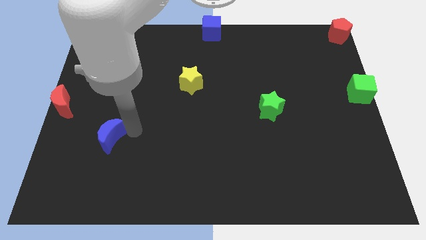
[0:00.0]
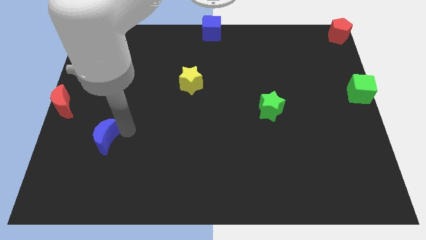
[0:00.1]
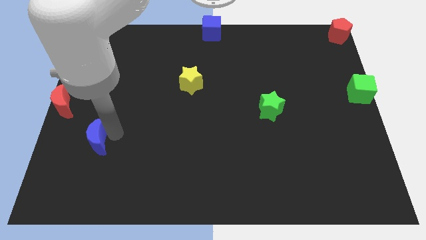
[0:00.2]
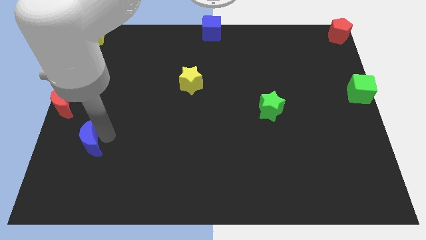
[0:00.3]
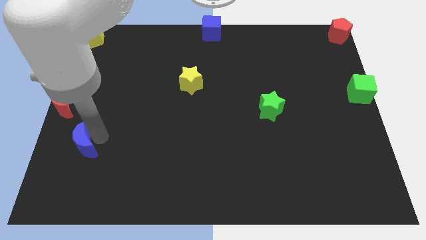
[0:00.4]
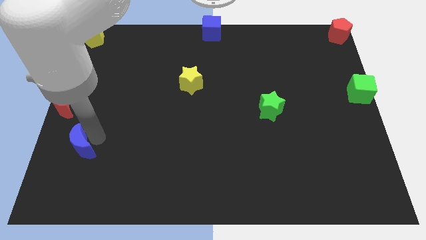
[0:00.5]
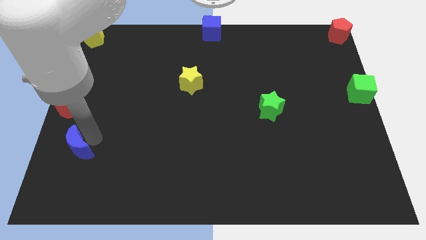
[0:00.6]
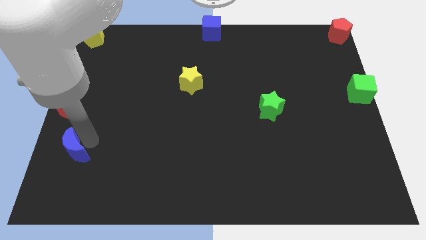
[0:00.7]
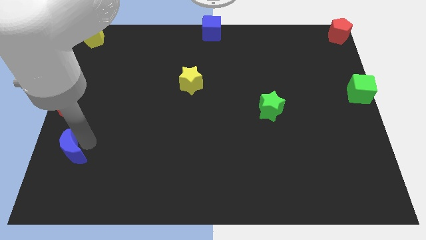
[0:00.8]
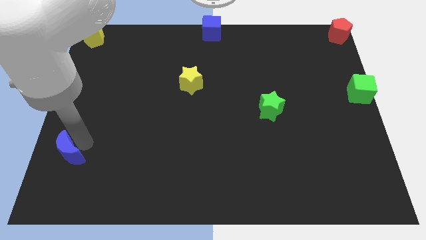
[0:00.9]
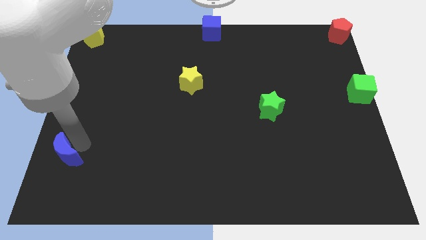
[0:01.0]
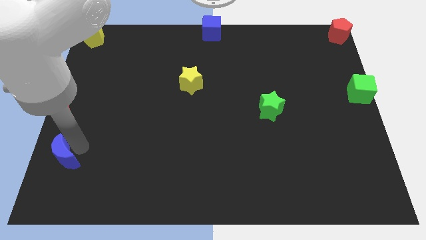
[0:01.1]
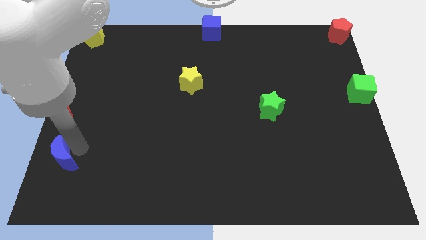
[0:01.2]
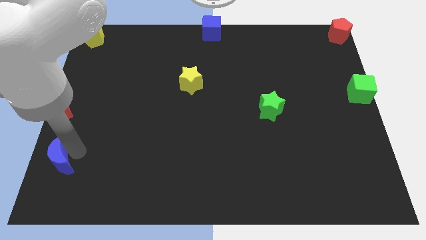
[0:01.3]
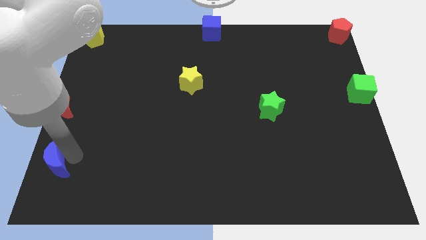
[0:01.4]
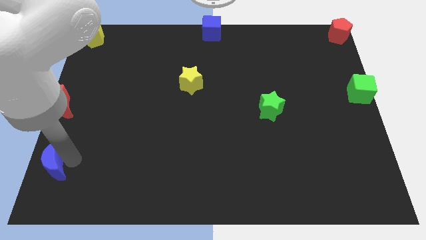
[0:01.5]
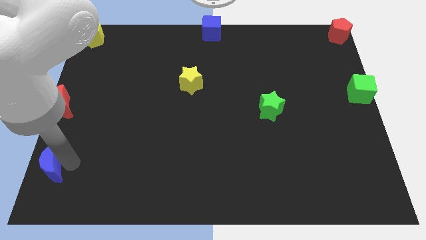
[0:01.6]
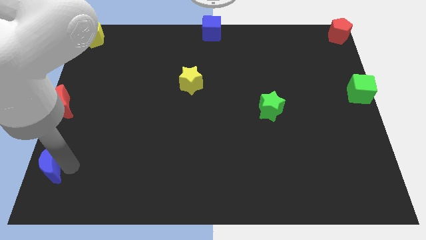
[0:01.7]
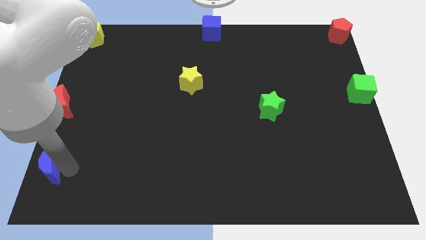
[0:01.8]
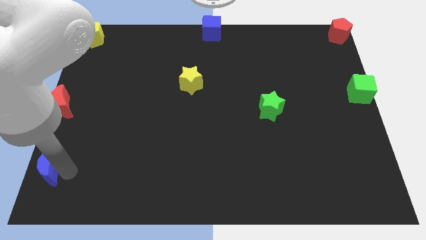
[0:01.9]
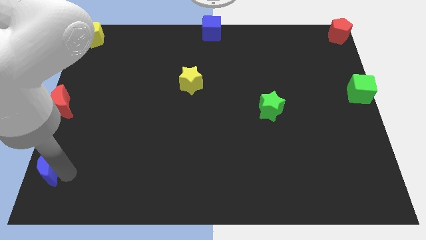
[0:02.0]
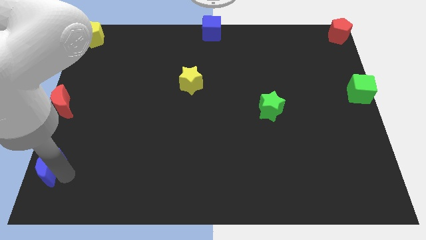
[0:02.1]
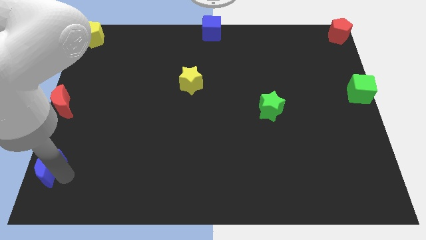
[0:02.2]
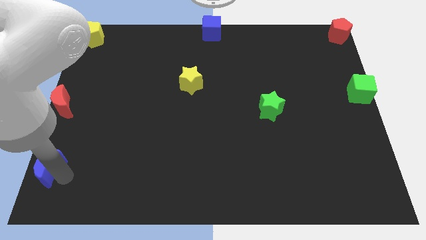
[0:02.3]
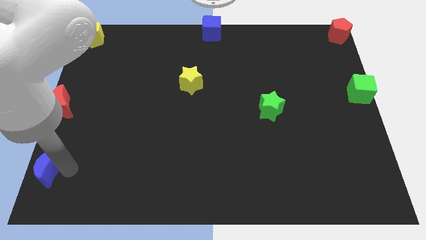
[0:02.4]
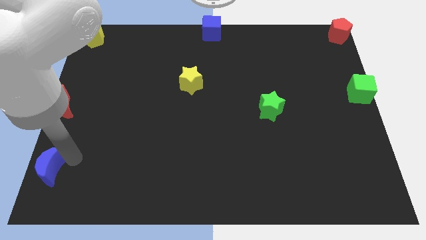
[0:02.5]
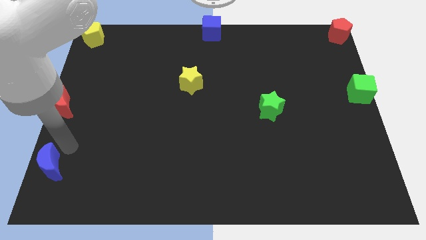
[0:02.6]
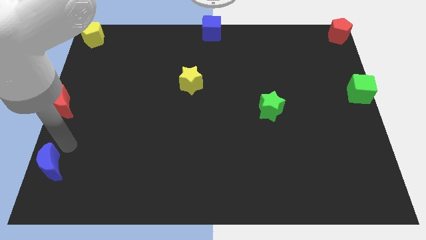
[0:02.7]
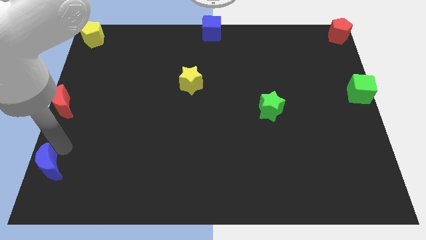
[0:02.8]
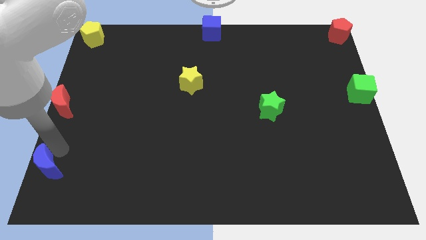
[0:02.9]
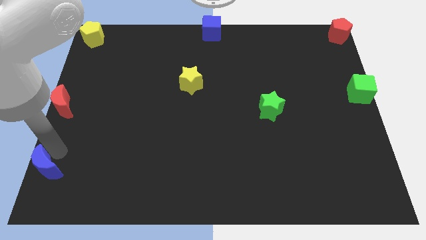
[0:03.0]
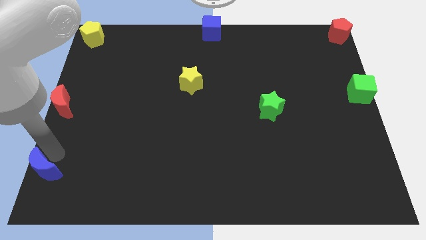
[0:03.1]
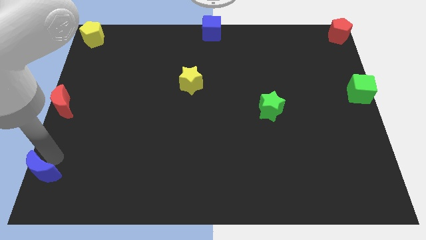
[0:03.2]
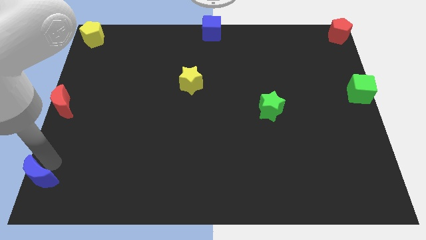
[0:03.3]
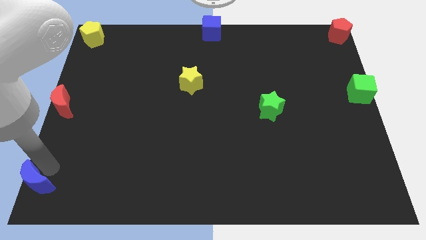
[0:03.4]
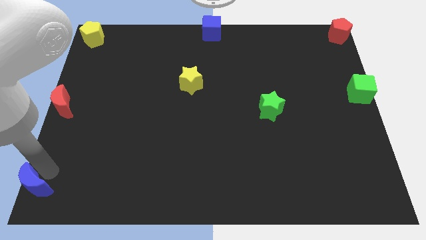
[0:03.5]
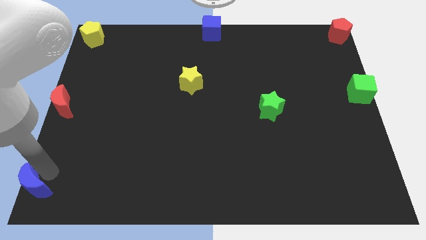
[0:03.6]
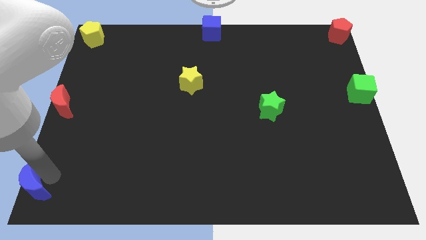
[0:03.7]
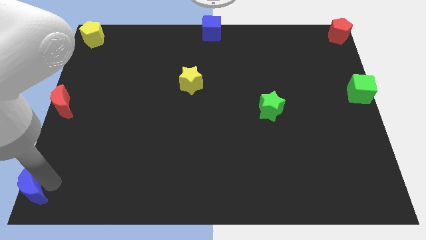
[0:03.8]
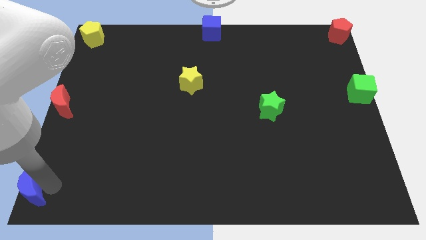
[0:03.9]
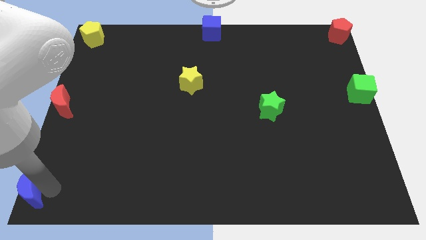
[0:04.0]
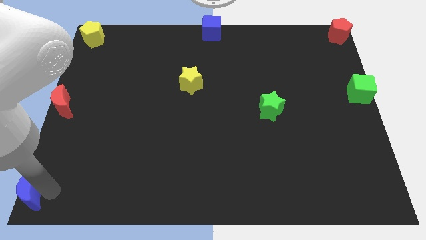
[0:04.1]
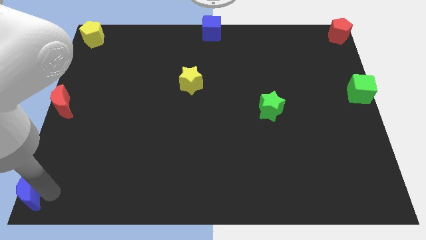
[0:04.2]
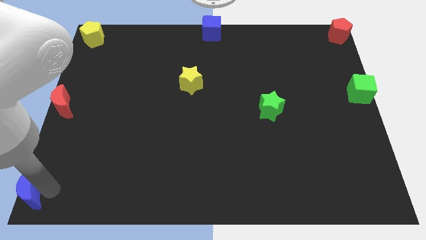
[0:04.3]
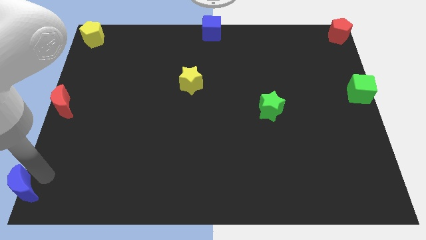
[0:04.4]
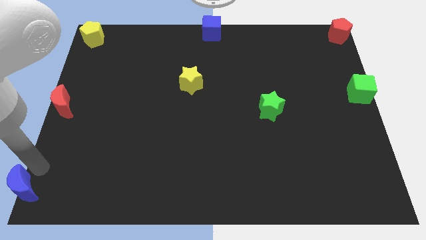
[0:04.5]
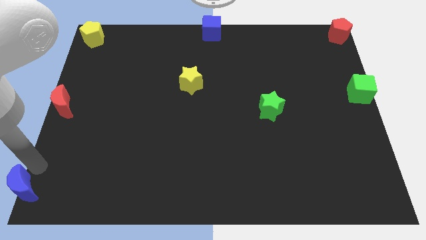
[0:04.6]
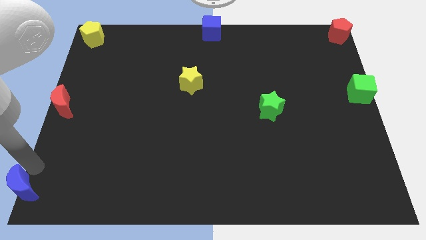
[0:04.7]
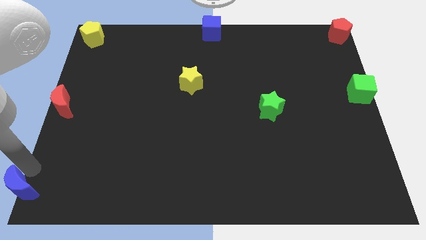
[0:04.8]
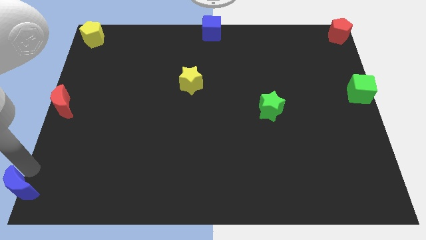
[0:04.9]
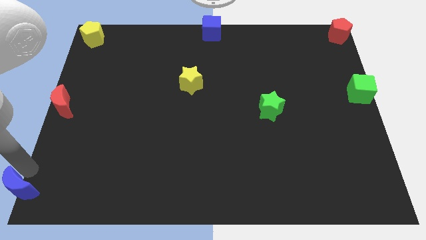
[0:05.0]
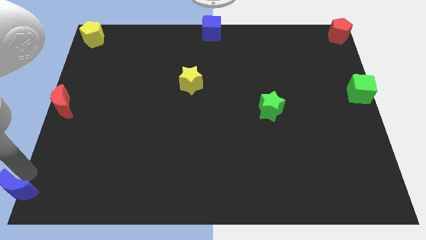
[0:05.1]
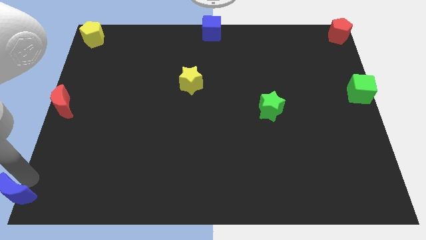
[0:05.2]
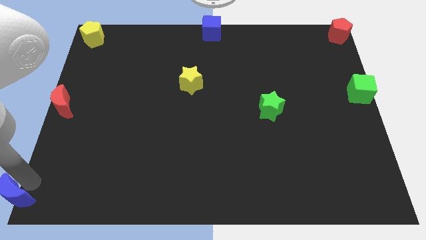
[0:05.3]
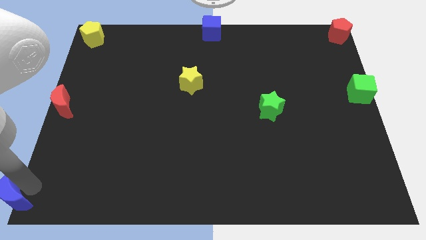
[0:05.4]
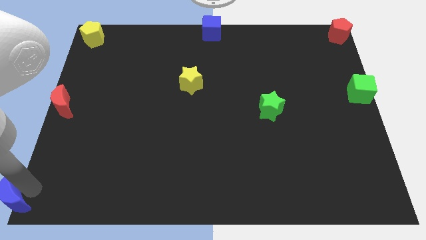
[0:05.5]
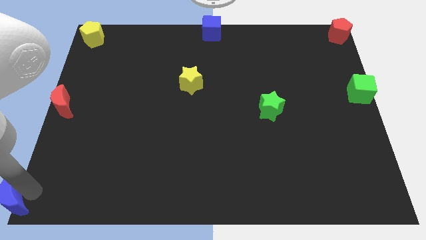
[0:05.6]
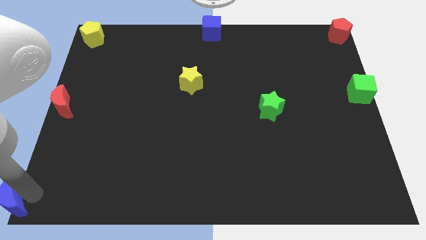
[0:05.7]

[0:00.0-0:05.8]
push the blue crescent to the bottom left to the board

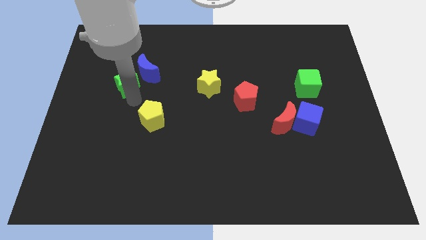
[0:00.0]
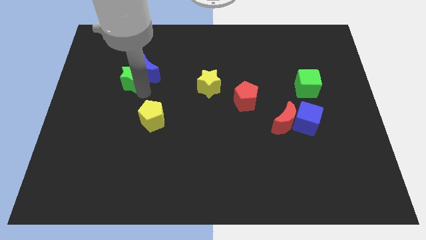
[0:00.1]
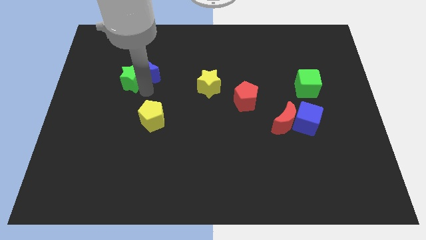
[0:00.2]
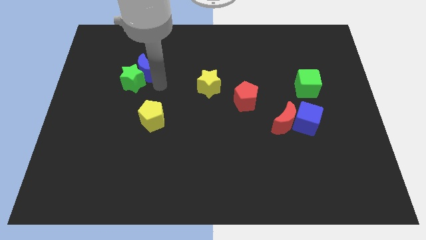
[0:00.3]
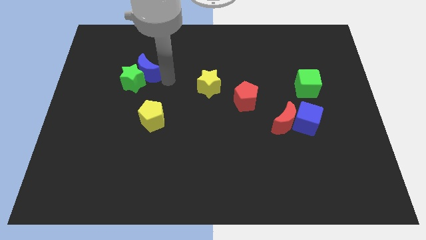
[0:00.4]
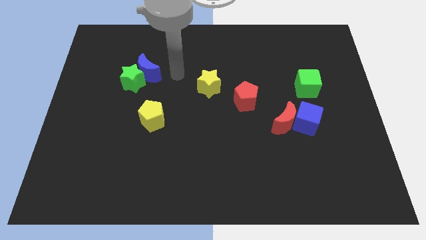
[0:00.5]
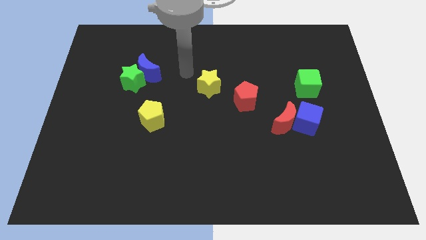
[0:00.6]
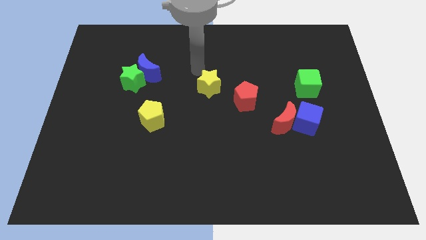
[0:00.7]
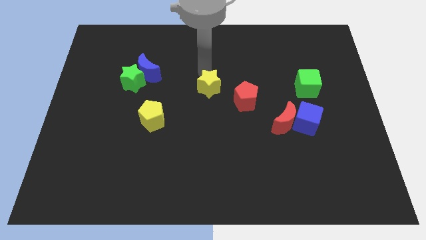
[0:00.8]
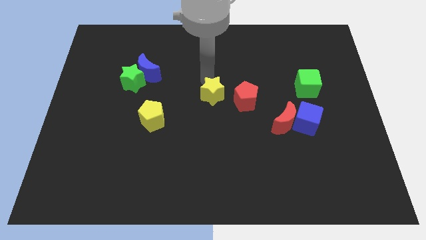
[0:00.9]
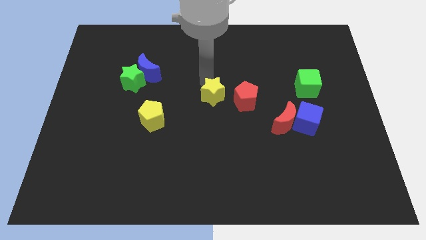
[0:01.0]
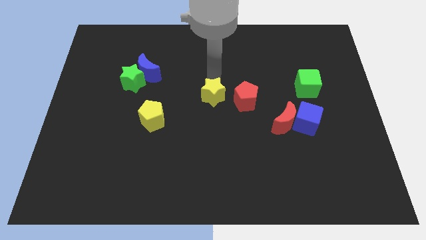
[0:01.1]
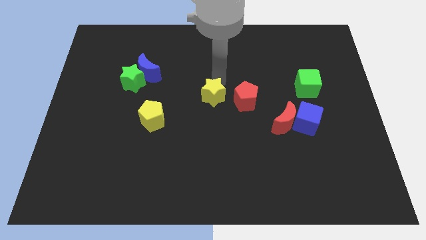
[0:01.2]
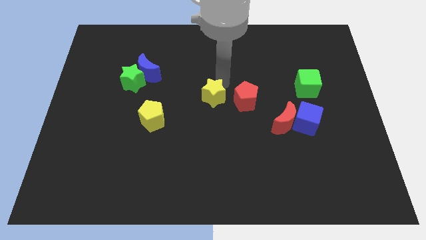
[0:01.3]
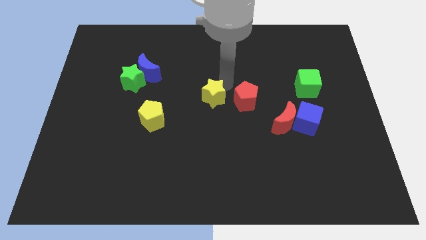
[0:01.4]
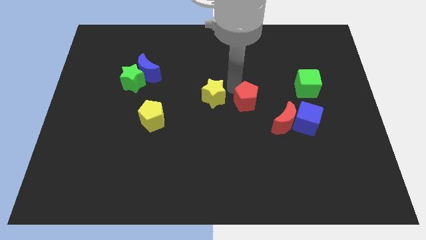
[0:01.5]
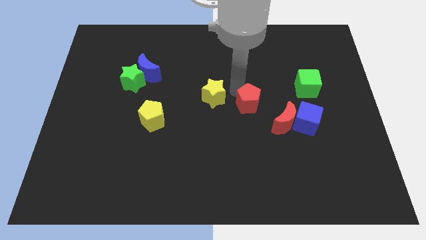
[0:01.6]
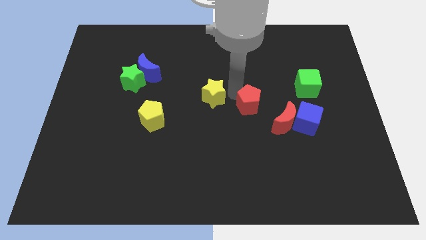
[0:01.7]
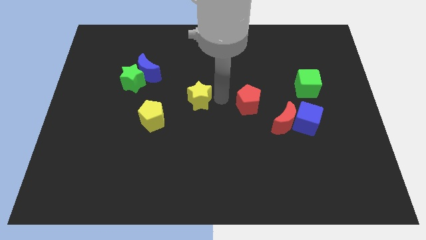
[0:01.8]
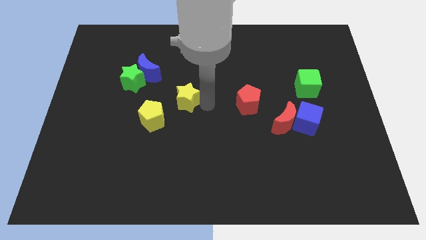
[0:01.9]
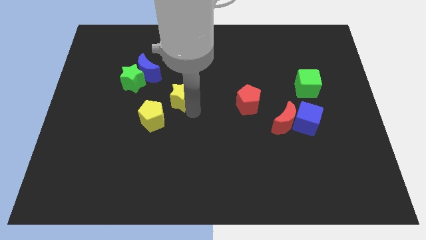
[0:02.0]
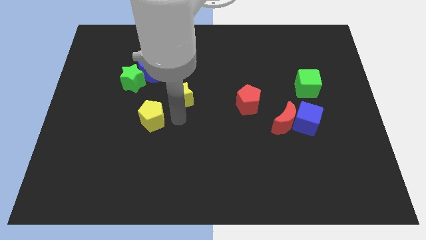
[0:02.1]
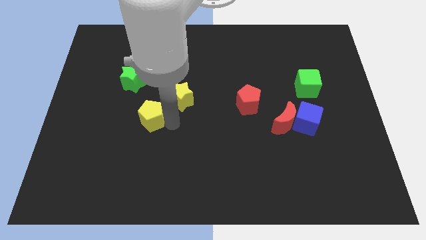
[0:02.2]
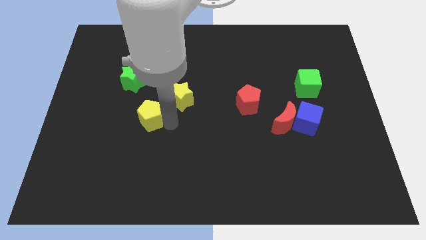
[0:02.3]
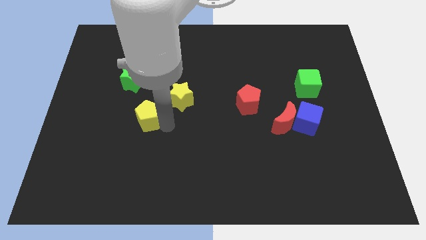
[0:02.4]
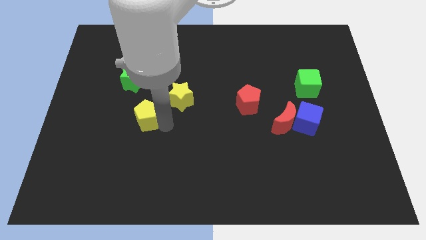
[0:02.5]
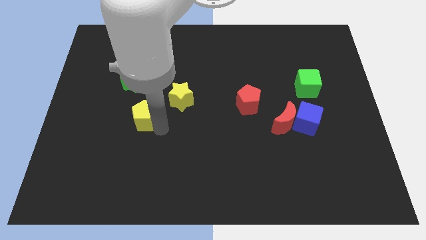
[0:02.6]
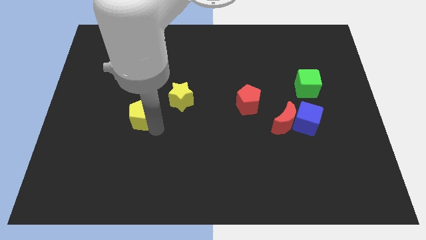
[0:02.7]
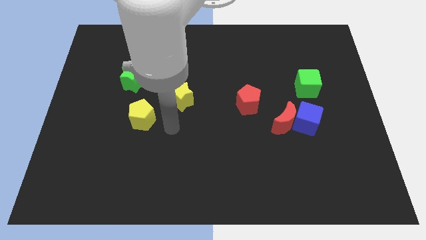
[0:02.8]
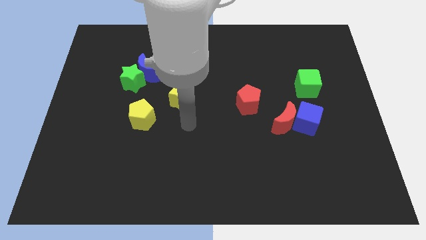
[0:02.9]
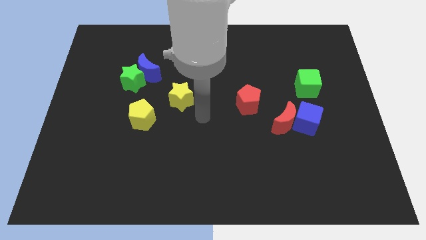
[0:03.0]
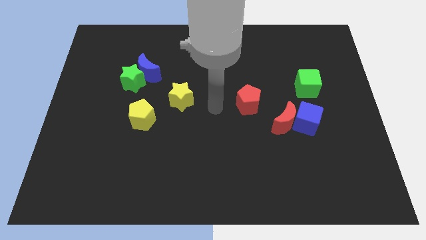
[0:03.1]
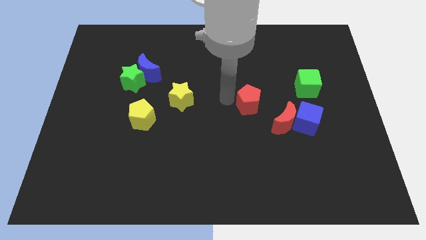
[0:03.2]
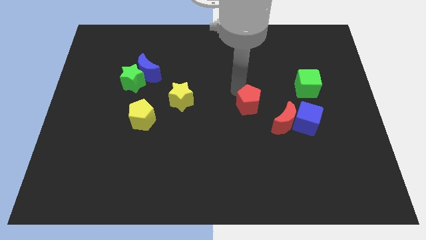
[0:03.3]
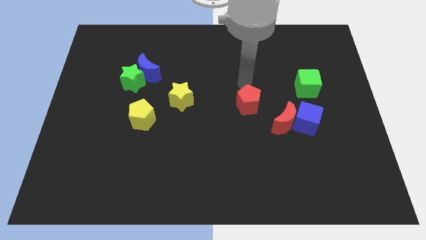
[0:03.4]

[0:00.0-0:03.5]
slightly move the yellow star and yellow pentagon left side of the board
